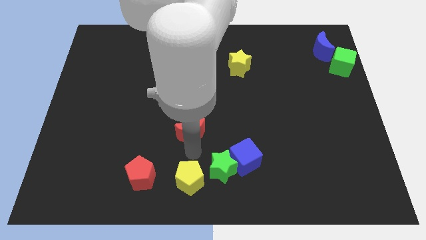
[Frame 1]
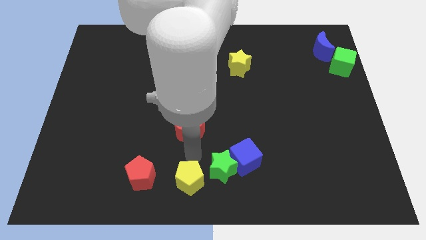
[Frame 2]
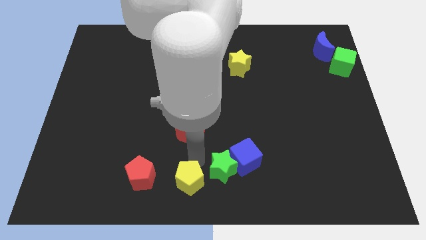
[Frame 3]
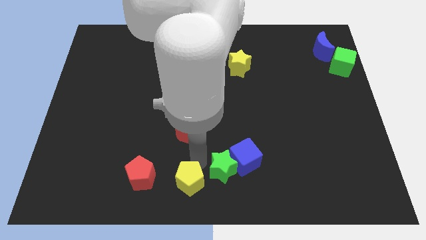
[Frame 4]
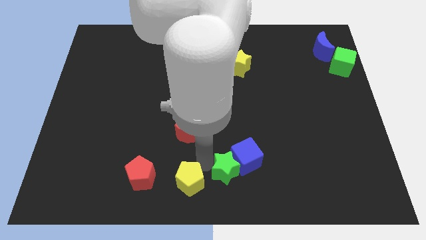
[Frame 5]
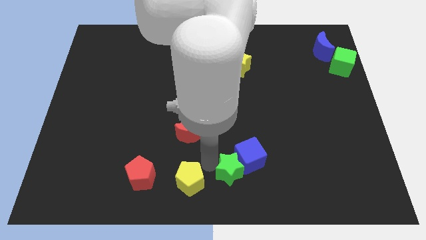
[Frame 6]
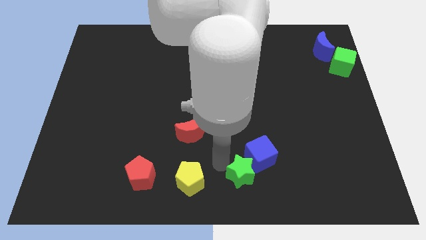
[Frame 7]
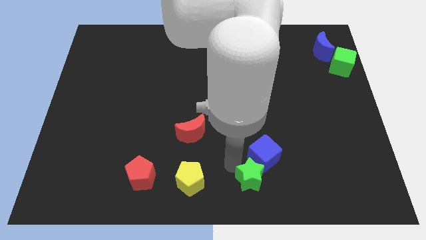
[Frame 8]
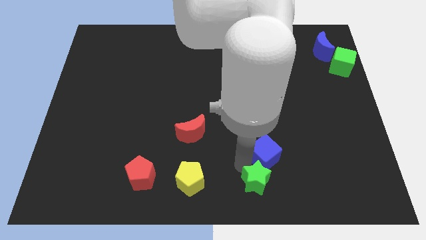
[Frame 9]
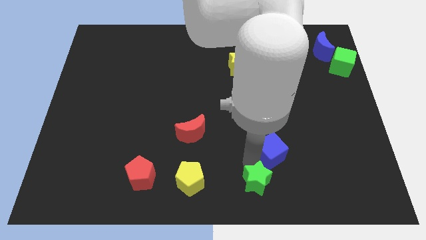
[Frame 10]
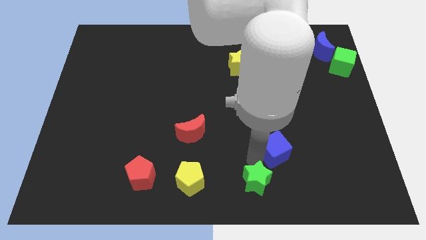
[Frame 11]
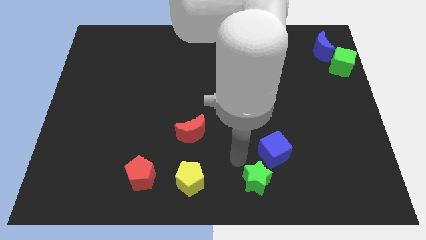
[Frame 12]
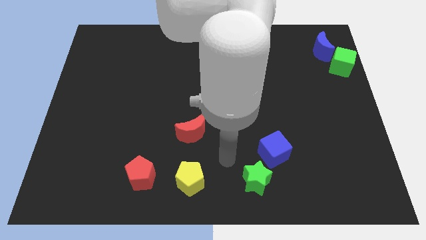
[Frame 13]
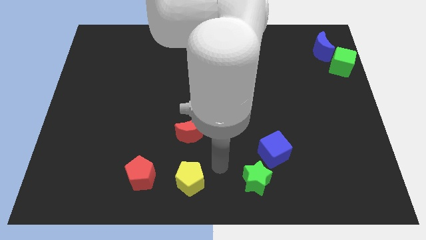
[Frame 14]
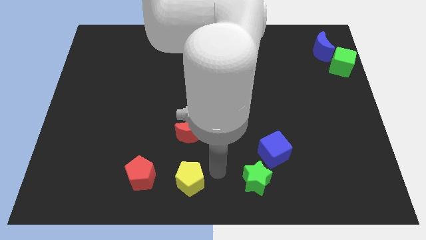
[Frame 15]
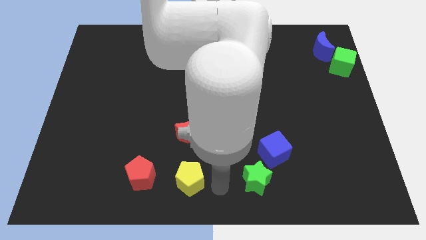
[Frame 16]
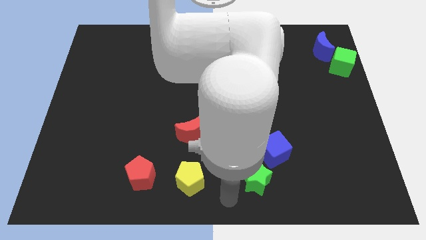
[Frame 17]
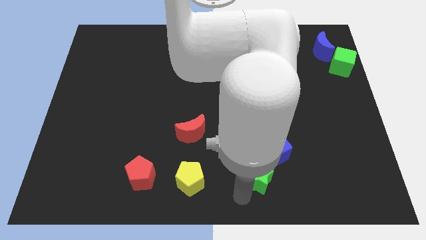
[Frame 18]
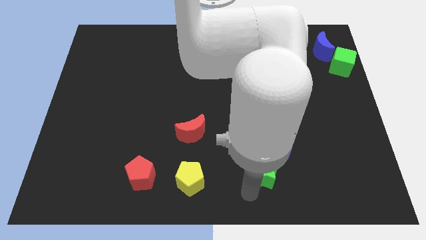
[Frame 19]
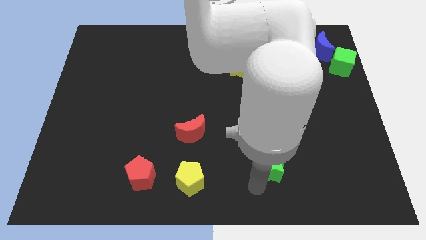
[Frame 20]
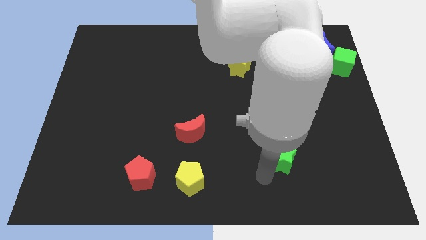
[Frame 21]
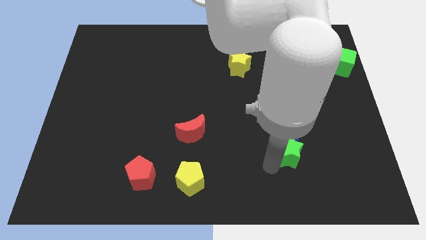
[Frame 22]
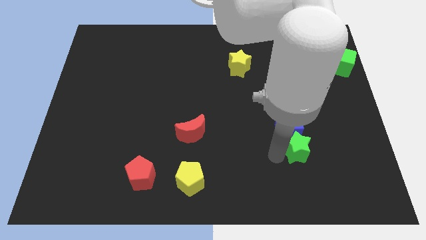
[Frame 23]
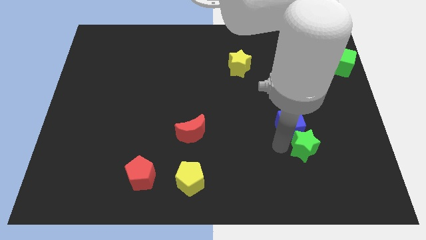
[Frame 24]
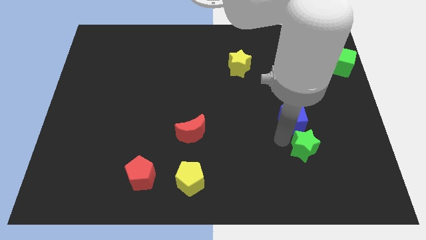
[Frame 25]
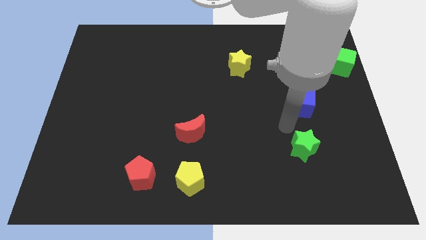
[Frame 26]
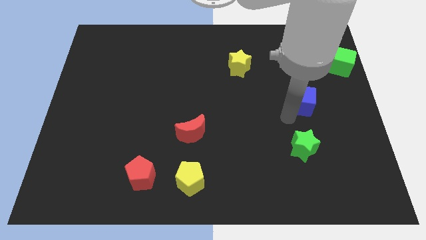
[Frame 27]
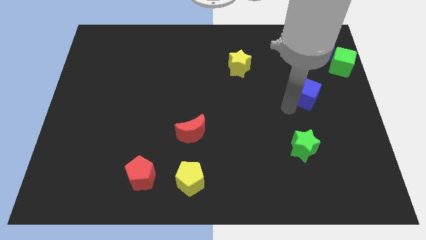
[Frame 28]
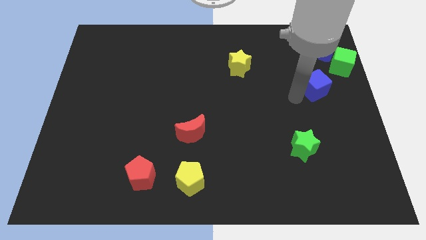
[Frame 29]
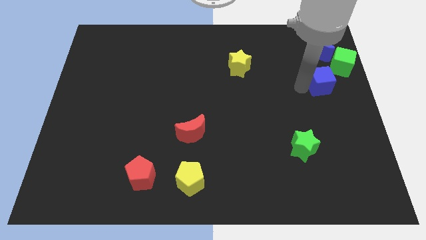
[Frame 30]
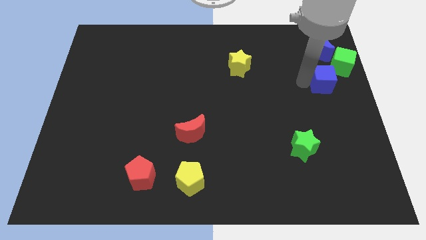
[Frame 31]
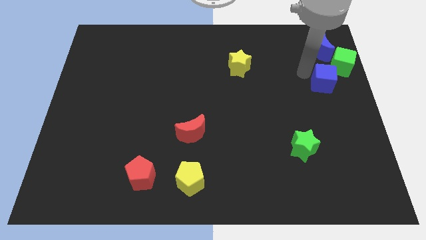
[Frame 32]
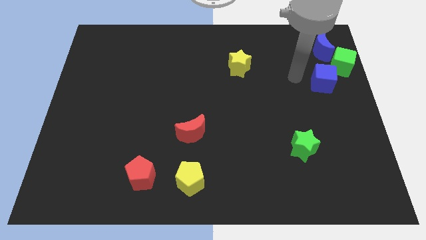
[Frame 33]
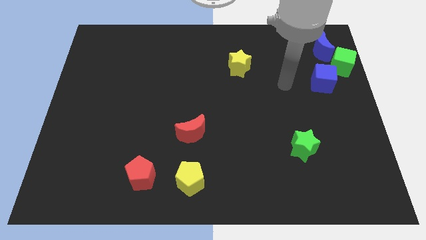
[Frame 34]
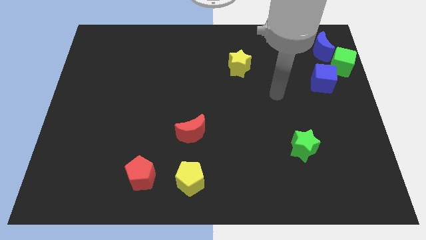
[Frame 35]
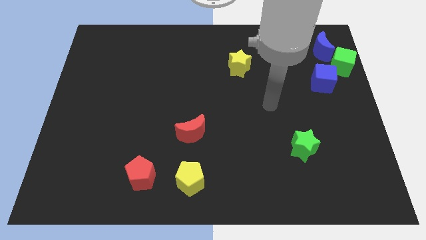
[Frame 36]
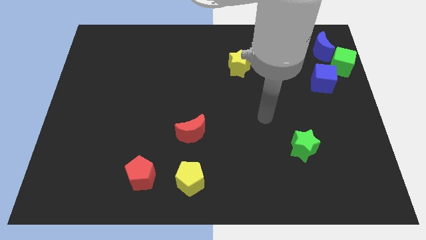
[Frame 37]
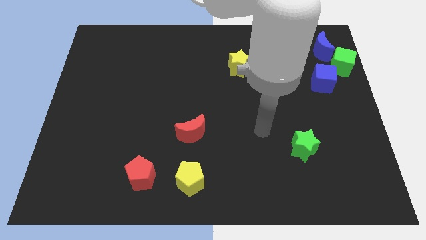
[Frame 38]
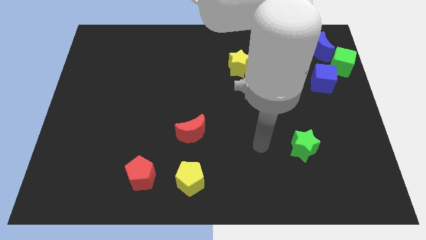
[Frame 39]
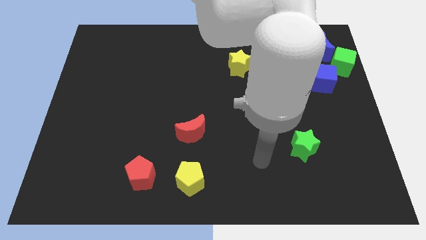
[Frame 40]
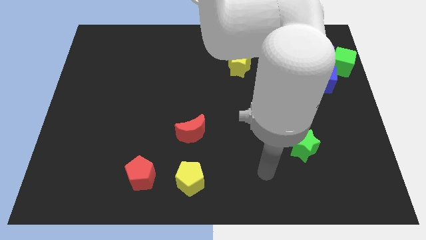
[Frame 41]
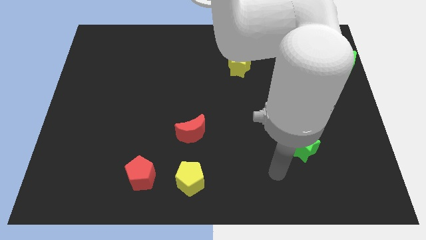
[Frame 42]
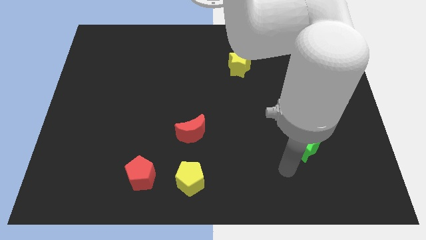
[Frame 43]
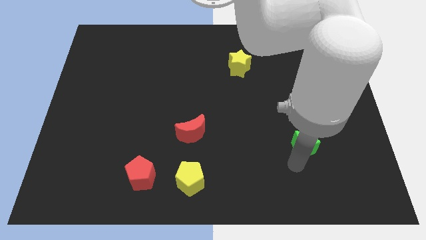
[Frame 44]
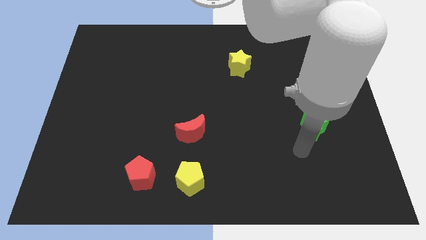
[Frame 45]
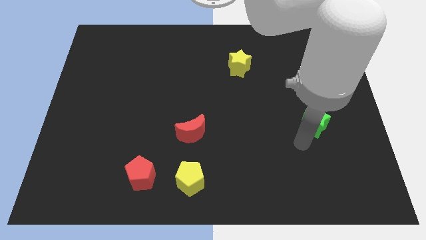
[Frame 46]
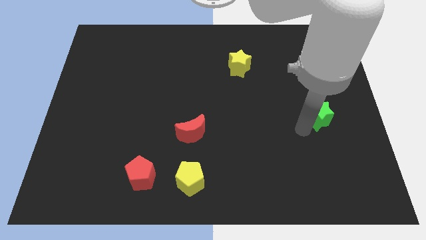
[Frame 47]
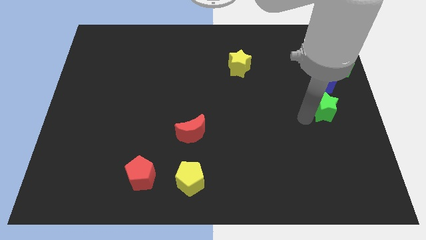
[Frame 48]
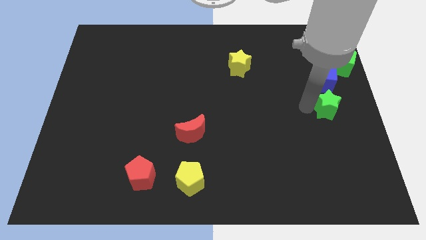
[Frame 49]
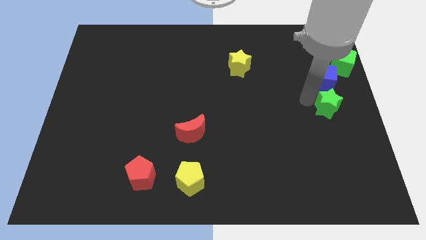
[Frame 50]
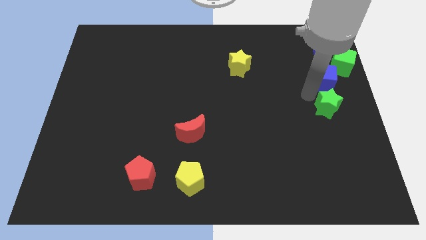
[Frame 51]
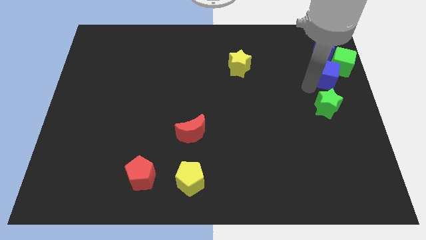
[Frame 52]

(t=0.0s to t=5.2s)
move the green star and the blue cube towards the top of the board

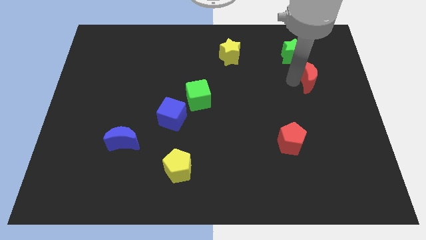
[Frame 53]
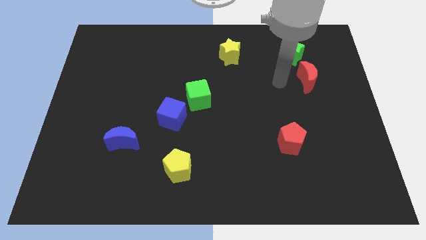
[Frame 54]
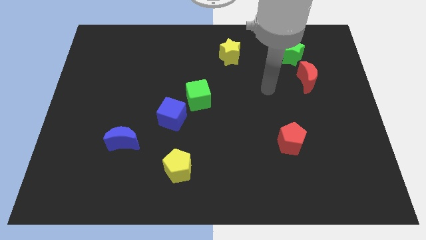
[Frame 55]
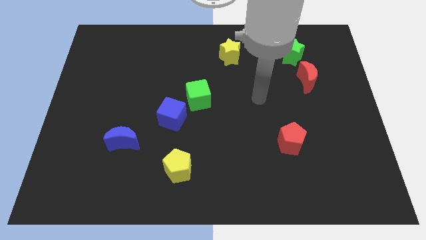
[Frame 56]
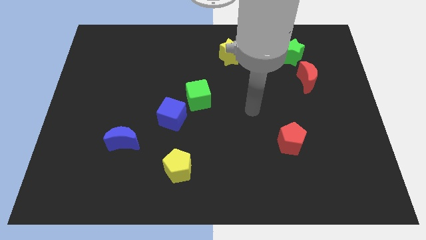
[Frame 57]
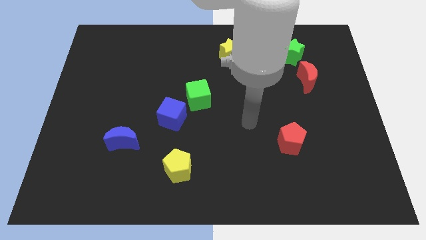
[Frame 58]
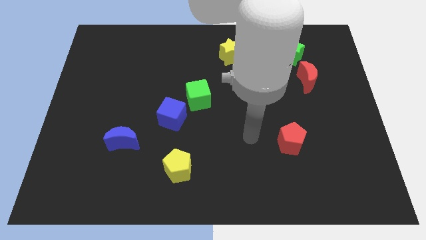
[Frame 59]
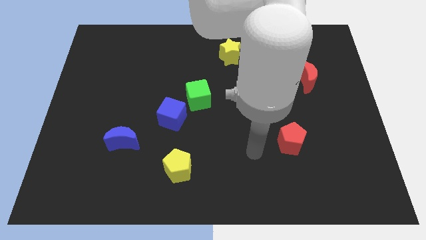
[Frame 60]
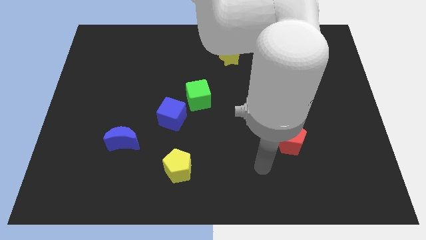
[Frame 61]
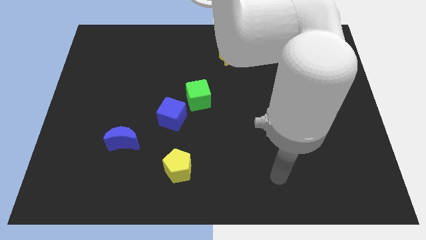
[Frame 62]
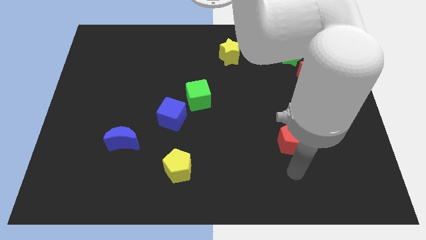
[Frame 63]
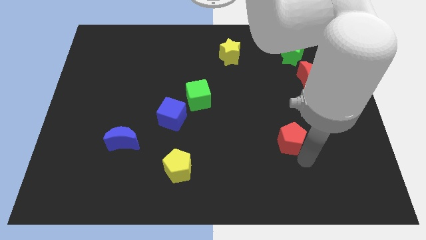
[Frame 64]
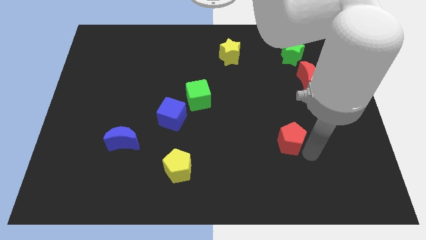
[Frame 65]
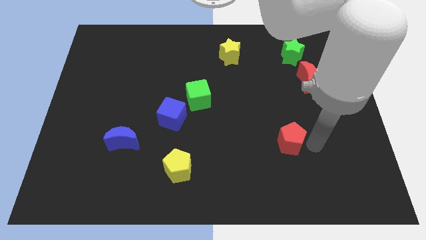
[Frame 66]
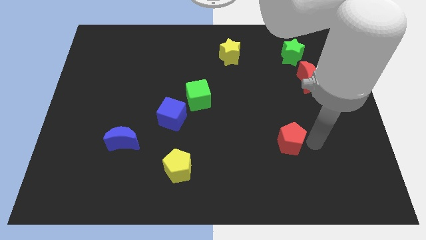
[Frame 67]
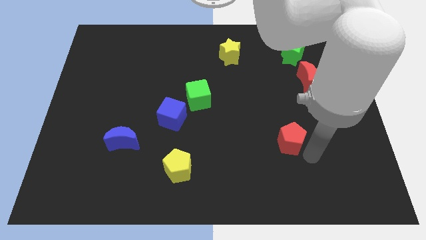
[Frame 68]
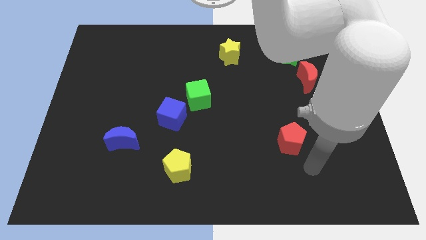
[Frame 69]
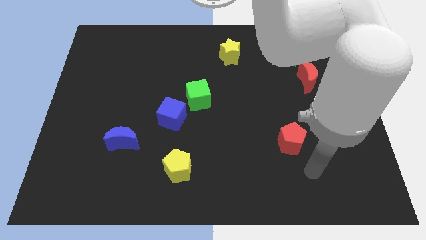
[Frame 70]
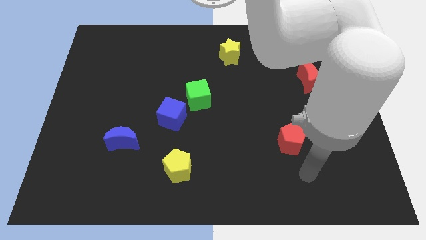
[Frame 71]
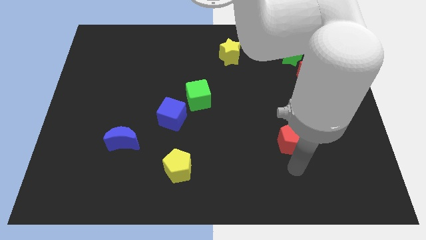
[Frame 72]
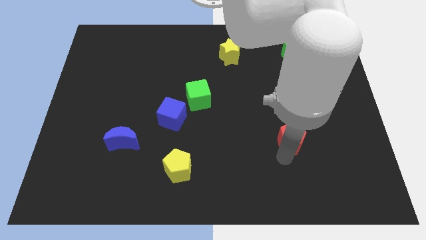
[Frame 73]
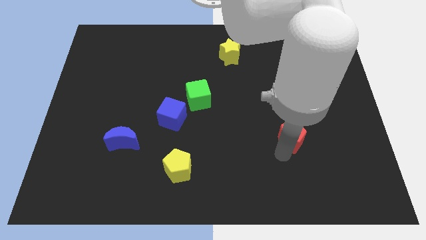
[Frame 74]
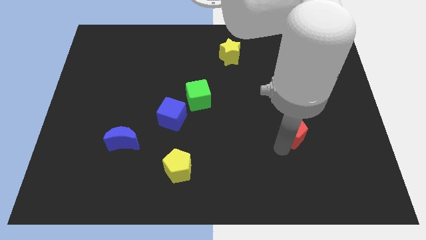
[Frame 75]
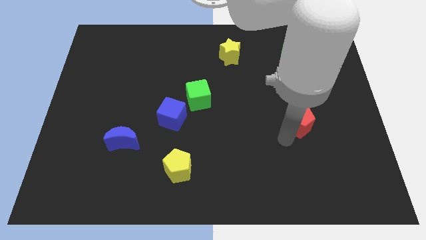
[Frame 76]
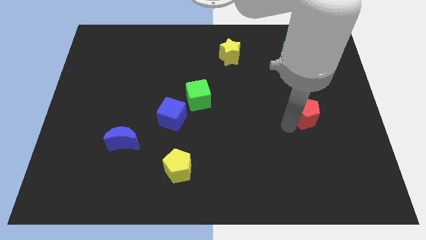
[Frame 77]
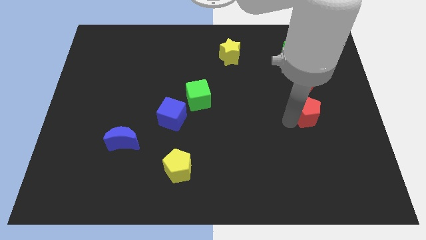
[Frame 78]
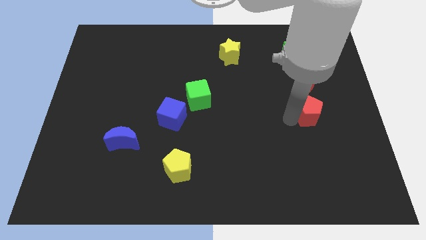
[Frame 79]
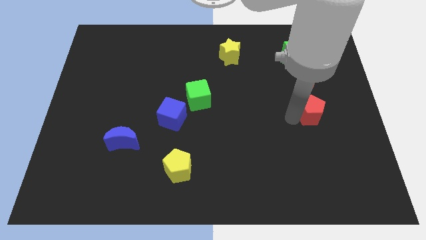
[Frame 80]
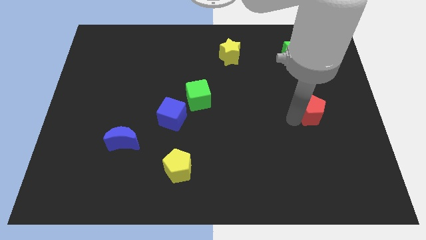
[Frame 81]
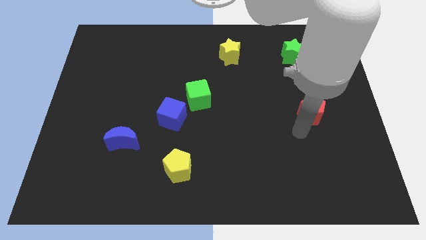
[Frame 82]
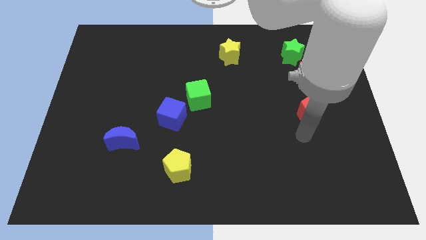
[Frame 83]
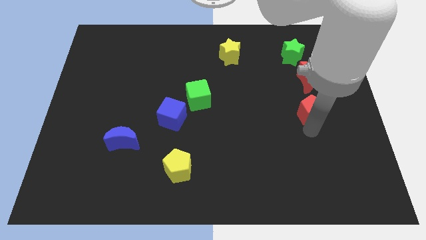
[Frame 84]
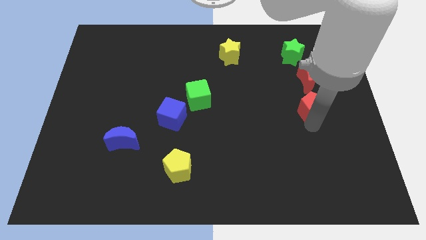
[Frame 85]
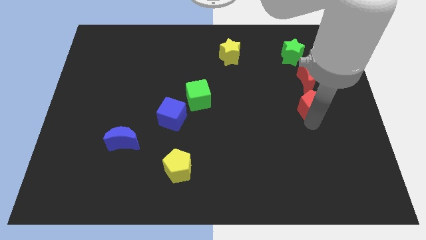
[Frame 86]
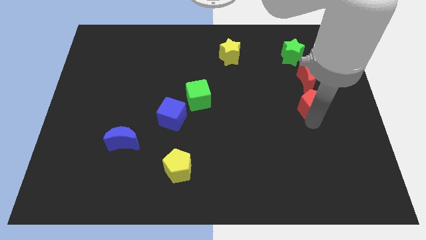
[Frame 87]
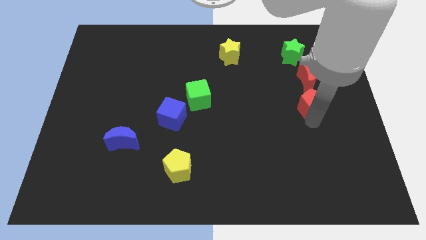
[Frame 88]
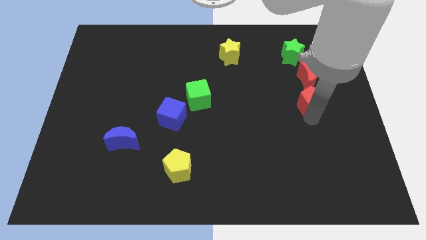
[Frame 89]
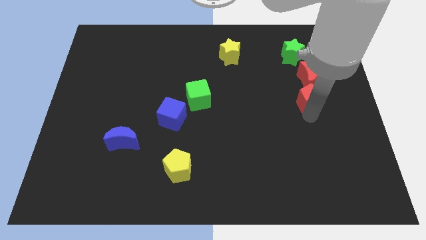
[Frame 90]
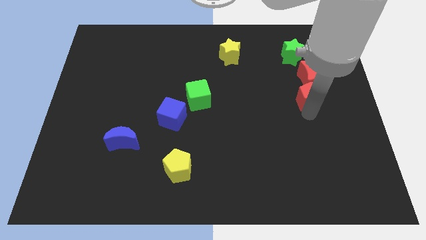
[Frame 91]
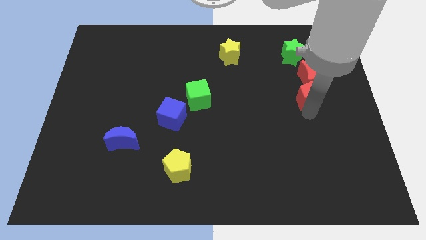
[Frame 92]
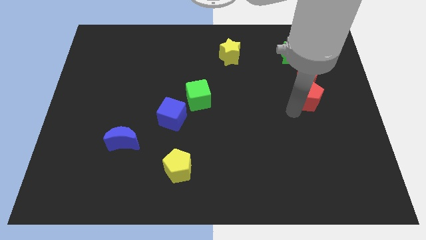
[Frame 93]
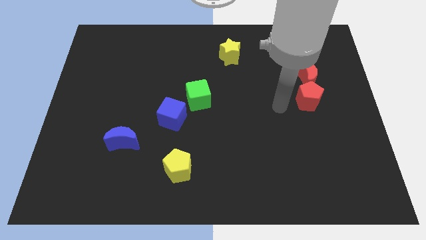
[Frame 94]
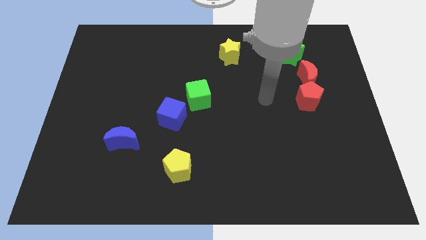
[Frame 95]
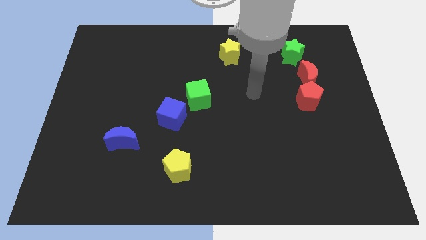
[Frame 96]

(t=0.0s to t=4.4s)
place the red pentagon right to the green cube
